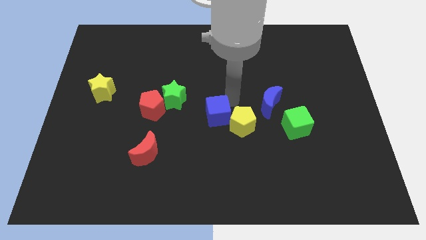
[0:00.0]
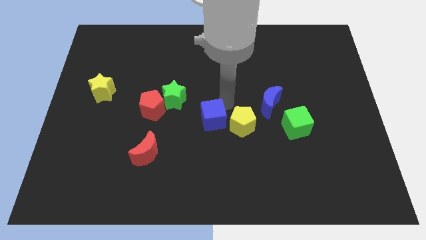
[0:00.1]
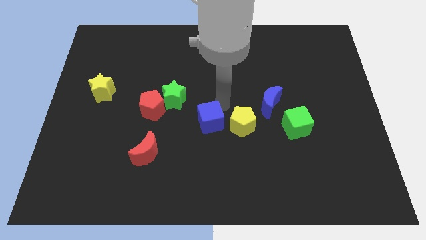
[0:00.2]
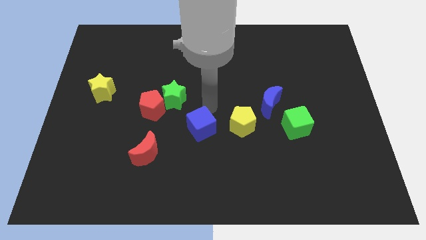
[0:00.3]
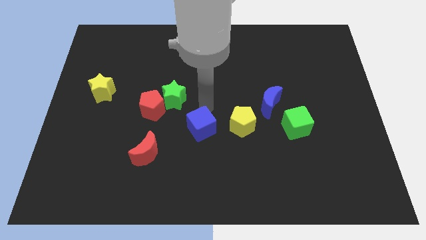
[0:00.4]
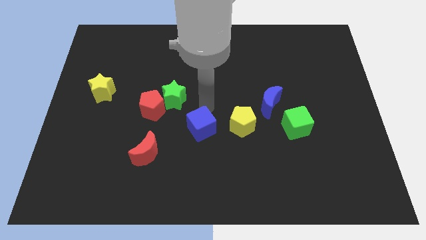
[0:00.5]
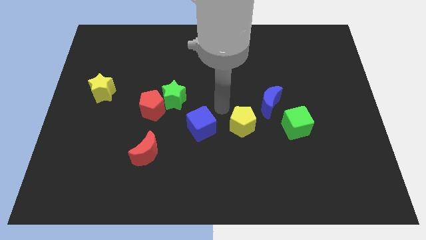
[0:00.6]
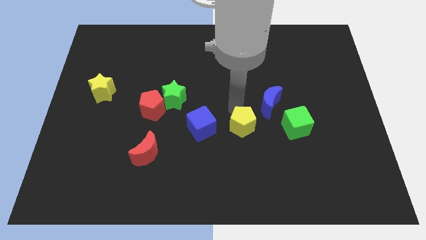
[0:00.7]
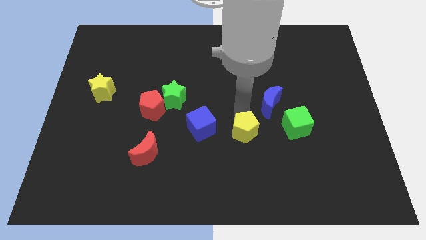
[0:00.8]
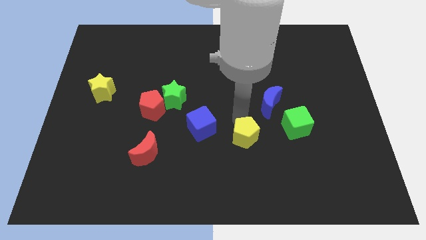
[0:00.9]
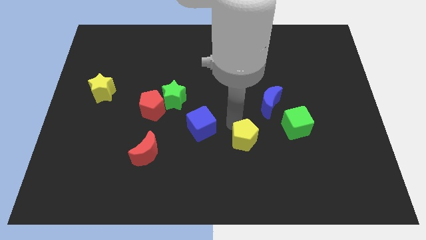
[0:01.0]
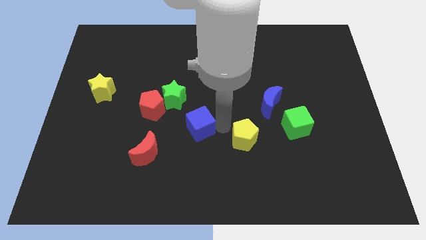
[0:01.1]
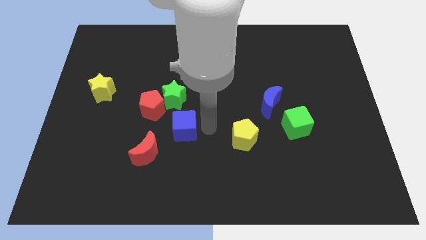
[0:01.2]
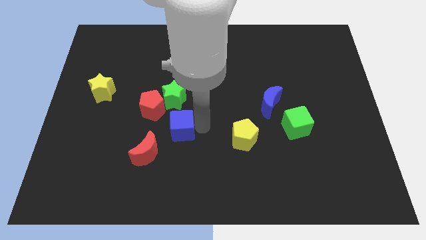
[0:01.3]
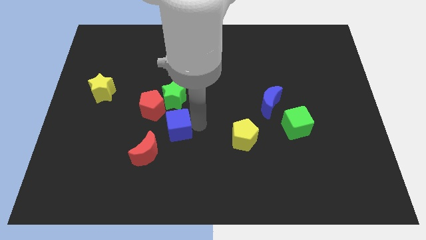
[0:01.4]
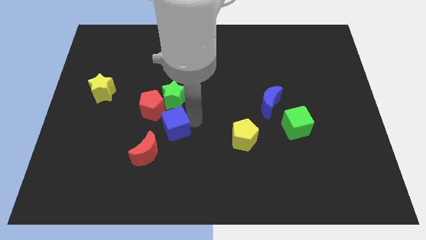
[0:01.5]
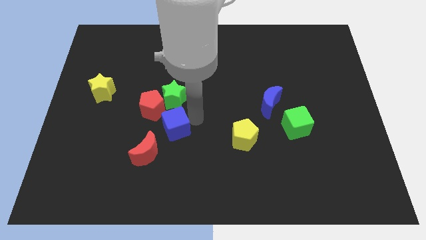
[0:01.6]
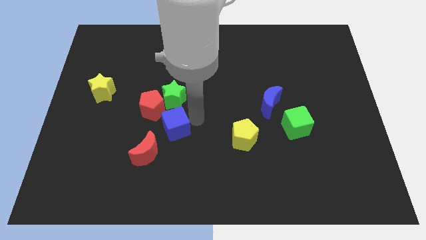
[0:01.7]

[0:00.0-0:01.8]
push the blue cube to the bottom of the green star

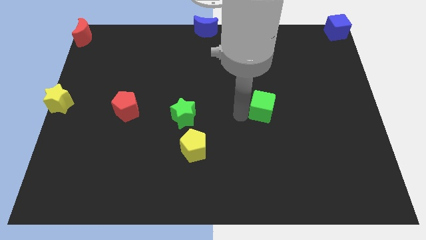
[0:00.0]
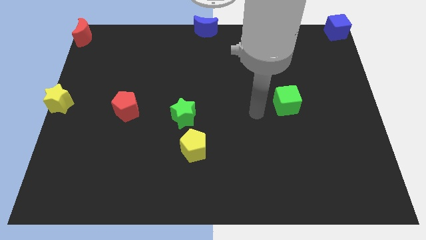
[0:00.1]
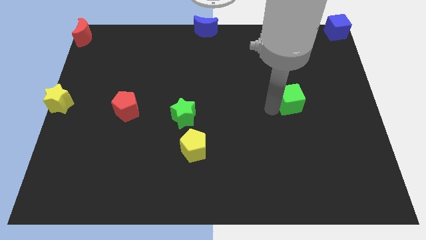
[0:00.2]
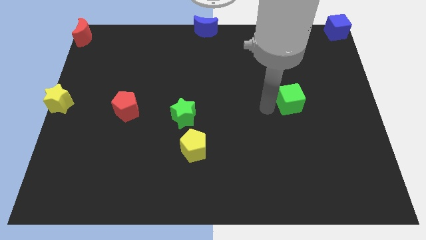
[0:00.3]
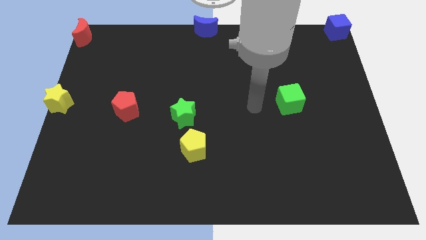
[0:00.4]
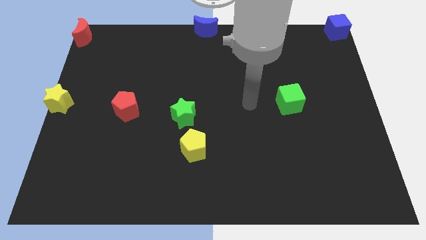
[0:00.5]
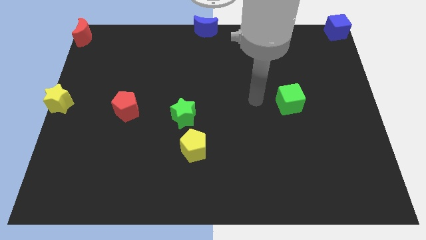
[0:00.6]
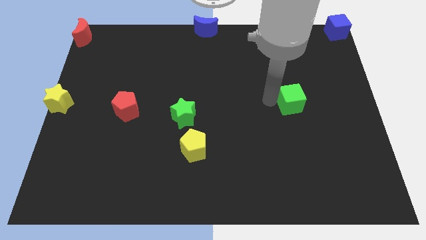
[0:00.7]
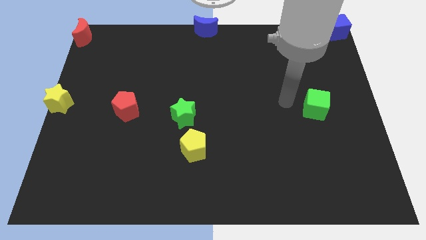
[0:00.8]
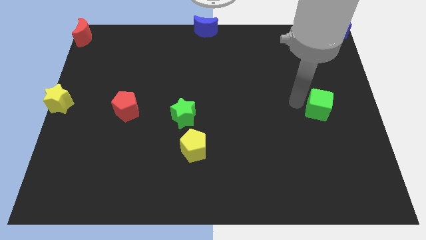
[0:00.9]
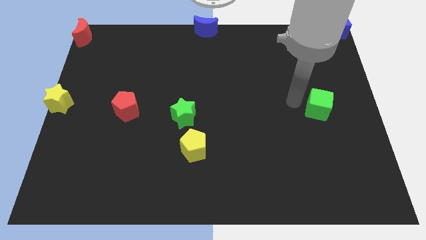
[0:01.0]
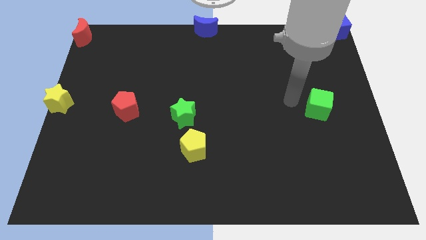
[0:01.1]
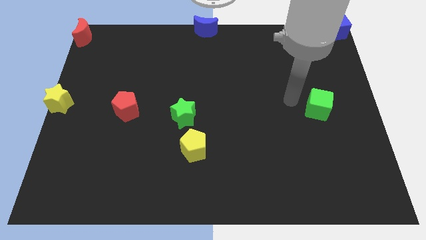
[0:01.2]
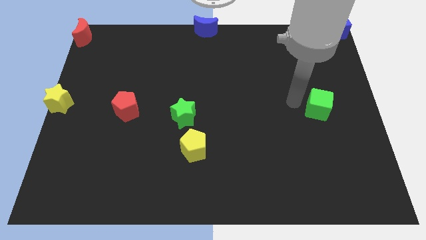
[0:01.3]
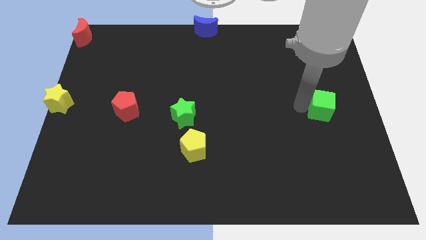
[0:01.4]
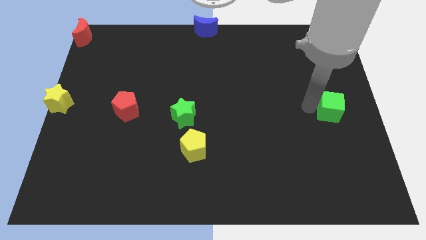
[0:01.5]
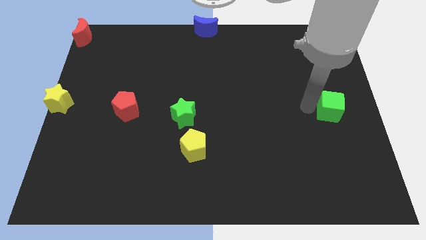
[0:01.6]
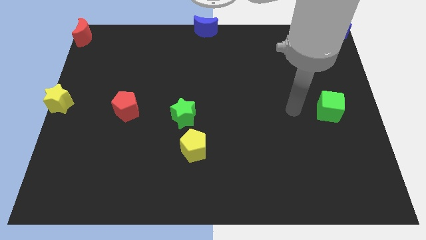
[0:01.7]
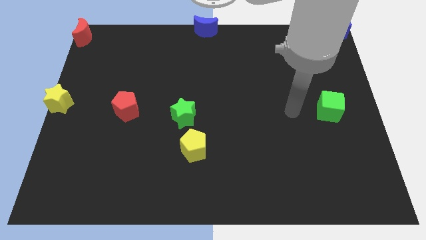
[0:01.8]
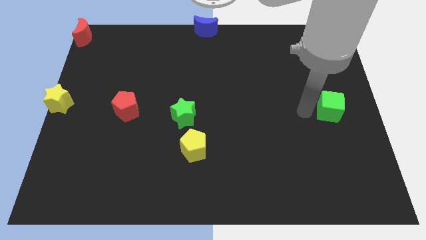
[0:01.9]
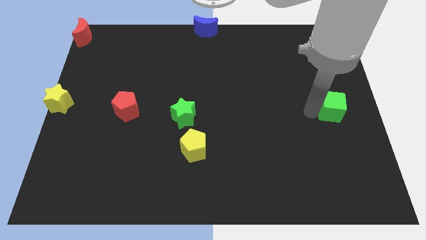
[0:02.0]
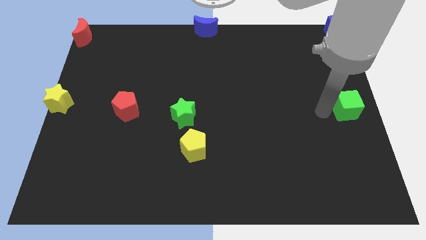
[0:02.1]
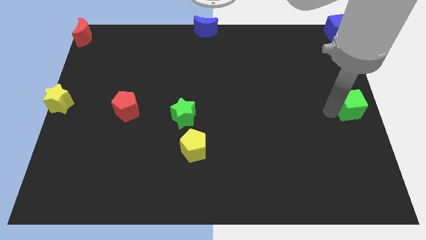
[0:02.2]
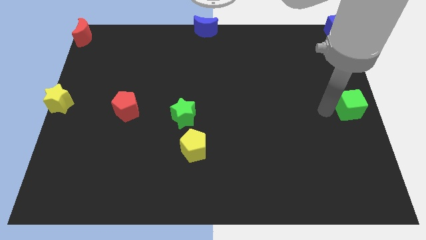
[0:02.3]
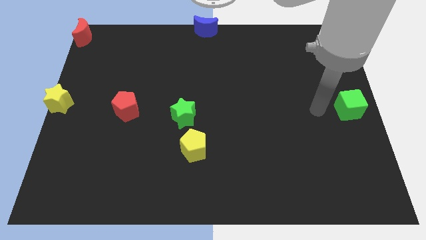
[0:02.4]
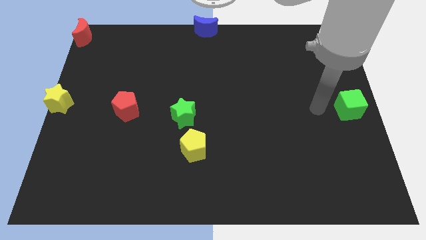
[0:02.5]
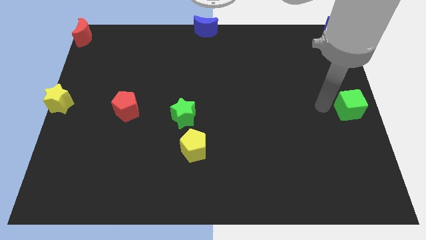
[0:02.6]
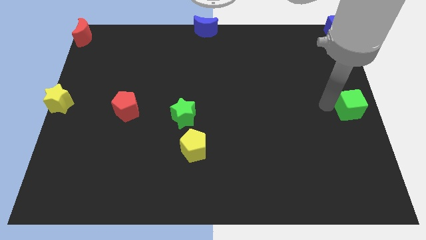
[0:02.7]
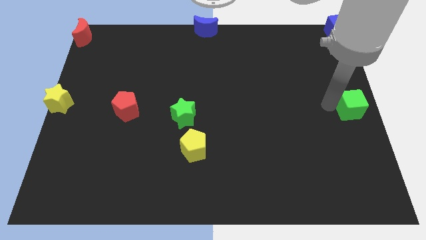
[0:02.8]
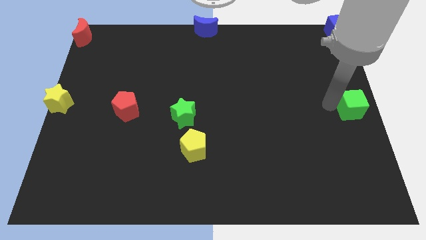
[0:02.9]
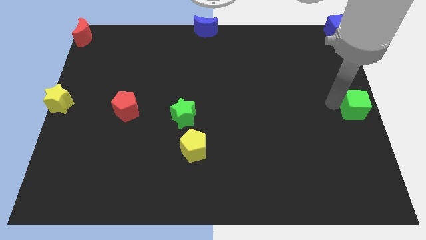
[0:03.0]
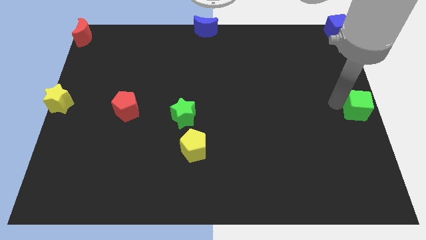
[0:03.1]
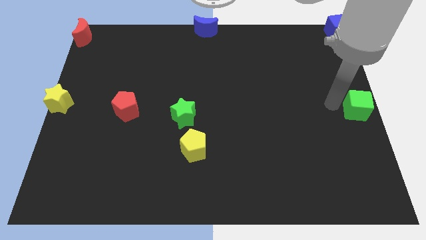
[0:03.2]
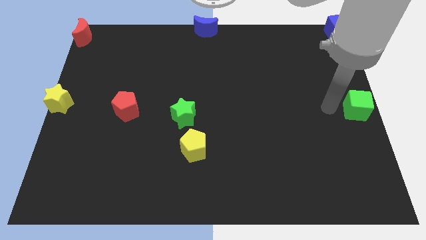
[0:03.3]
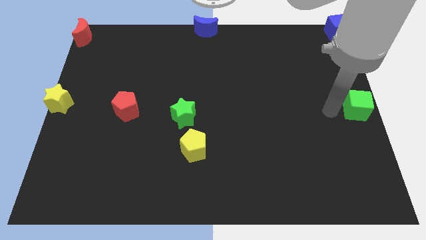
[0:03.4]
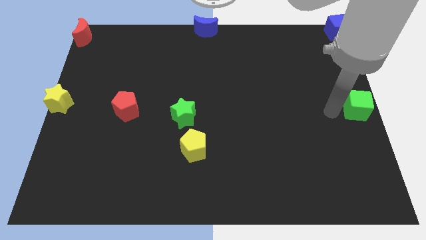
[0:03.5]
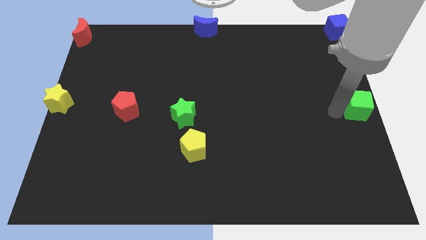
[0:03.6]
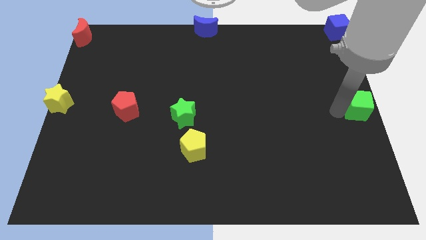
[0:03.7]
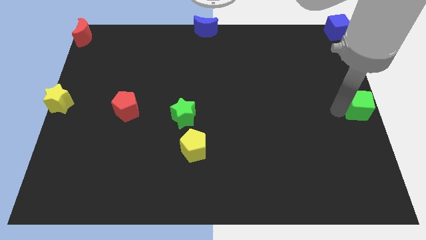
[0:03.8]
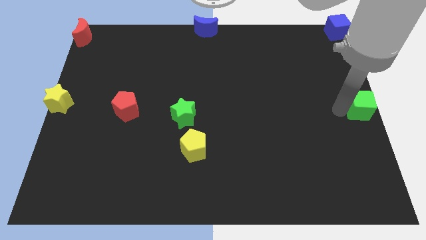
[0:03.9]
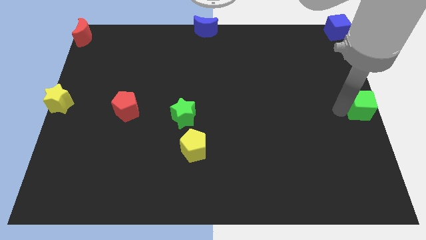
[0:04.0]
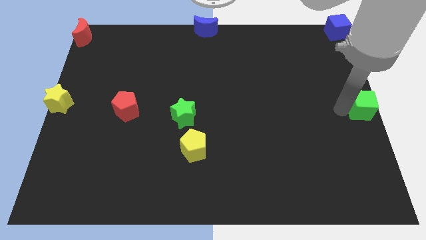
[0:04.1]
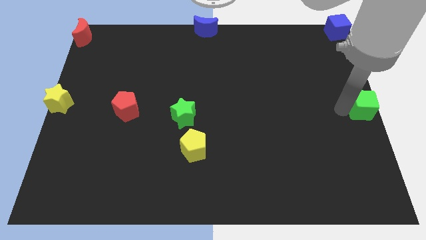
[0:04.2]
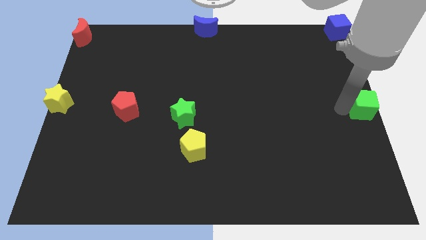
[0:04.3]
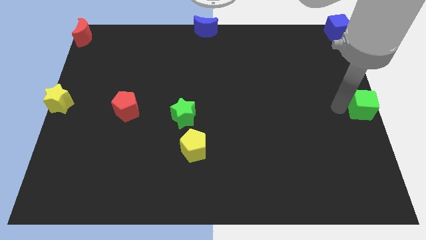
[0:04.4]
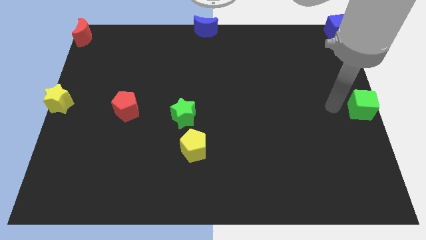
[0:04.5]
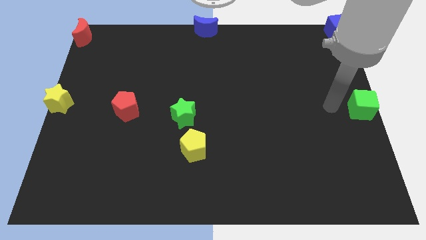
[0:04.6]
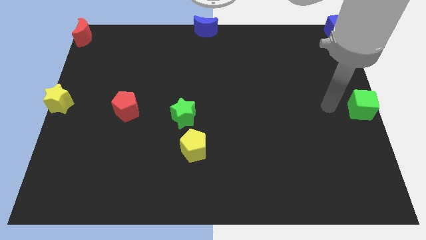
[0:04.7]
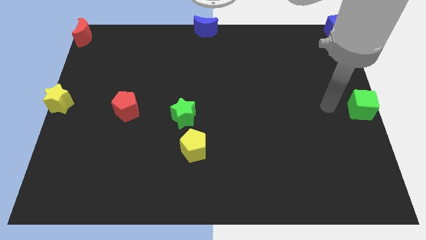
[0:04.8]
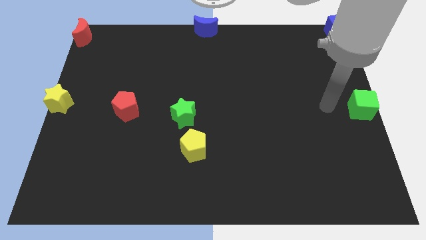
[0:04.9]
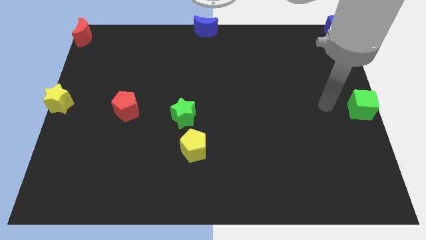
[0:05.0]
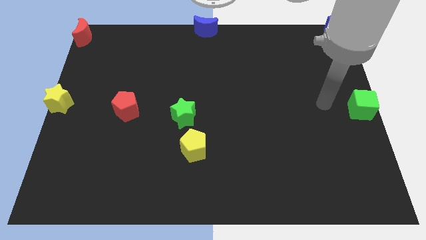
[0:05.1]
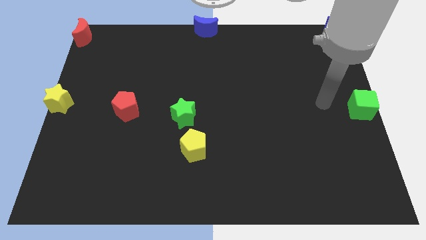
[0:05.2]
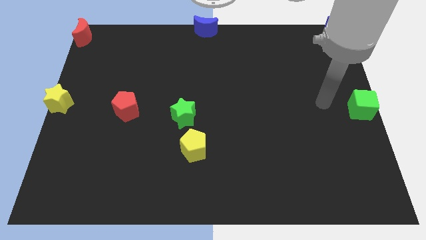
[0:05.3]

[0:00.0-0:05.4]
place the green cube to the right center of the board

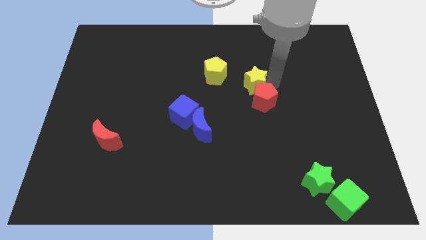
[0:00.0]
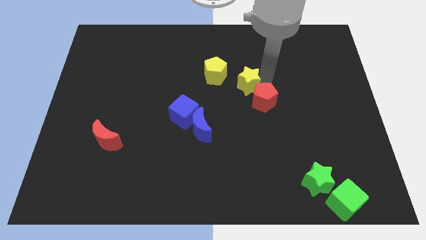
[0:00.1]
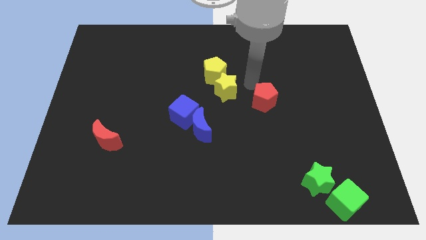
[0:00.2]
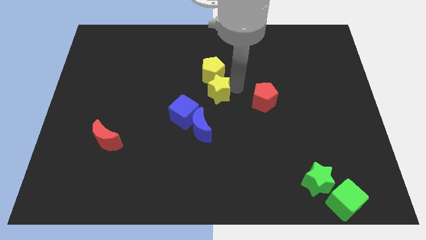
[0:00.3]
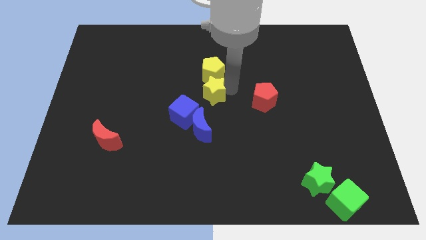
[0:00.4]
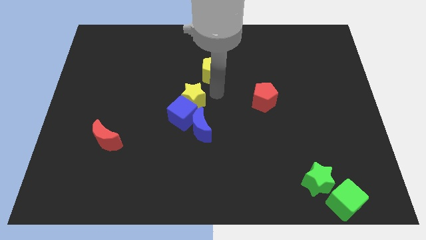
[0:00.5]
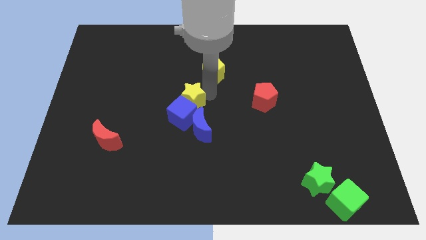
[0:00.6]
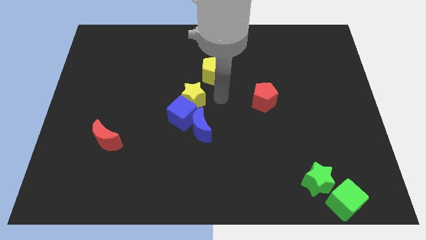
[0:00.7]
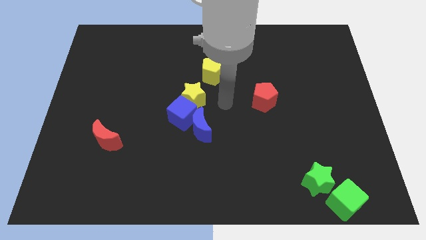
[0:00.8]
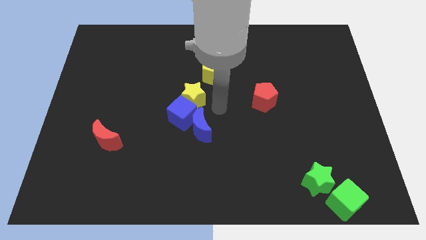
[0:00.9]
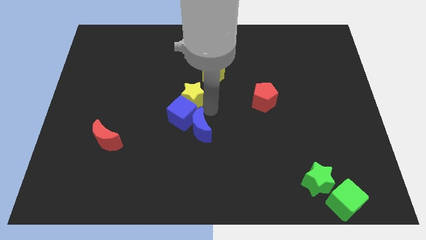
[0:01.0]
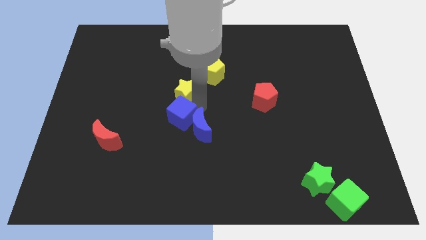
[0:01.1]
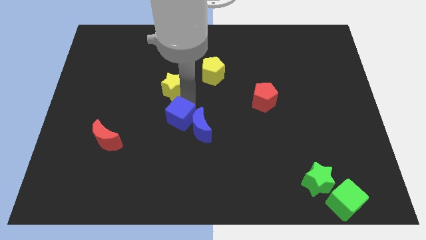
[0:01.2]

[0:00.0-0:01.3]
place the yellow star to the top of the blue cube

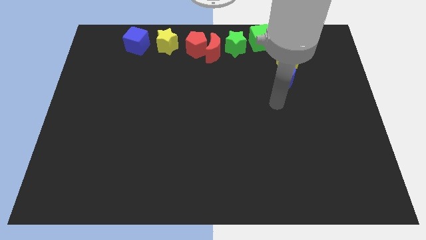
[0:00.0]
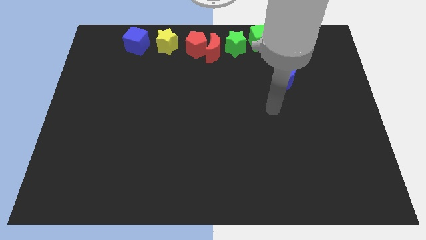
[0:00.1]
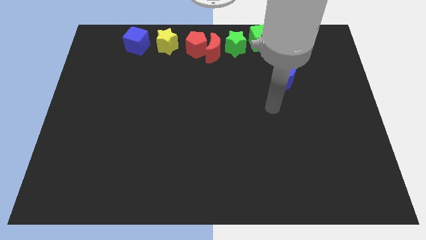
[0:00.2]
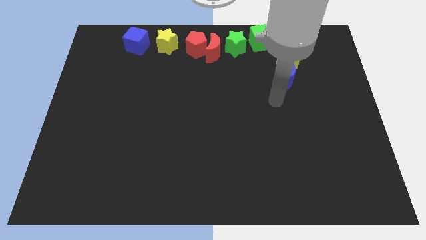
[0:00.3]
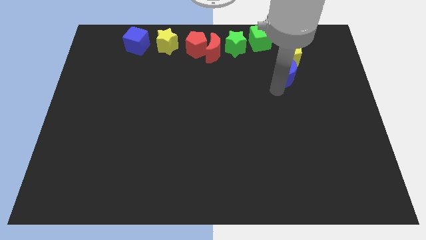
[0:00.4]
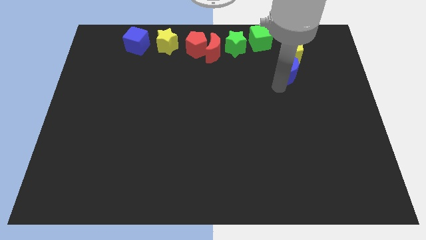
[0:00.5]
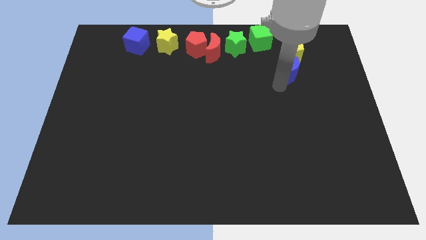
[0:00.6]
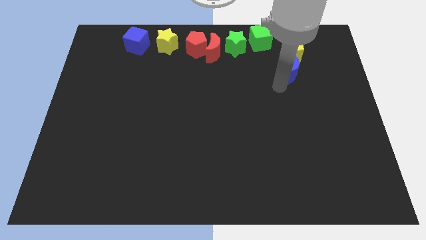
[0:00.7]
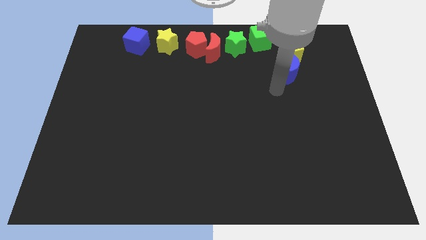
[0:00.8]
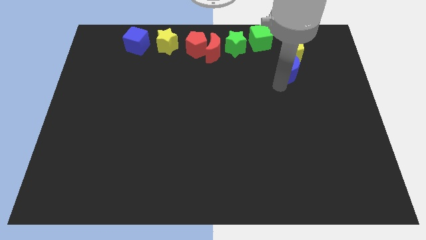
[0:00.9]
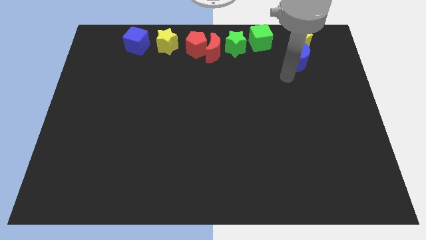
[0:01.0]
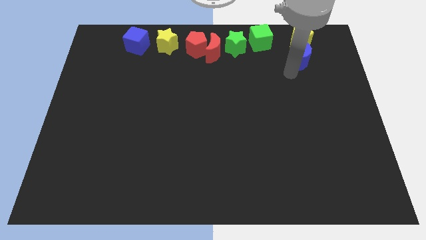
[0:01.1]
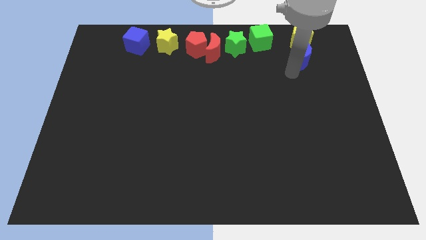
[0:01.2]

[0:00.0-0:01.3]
move blue crescent along with yellow pentagon to the right top
